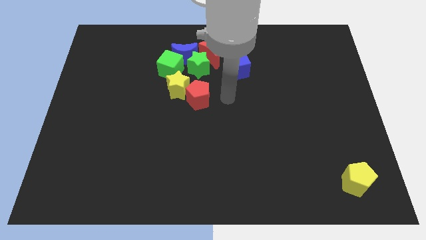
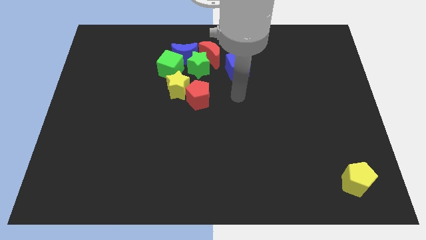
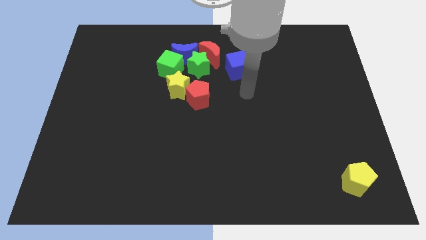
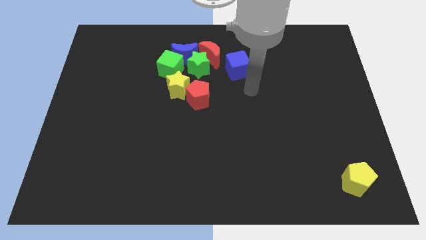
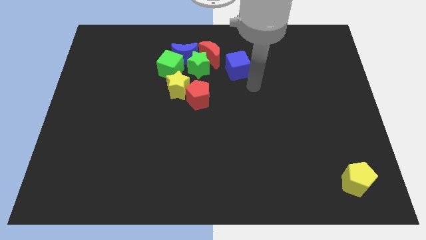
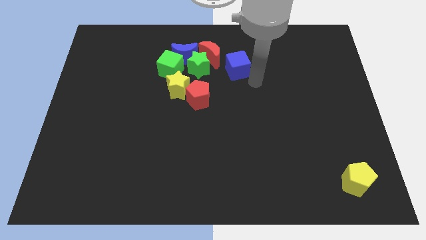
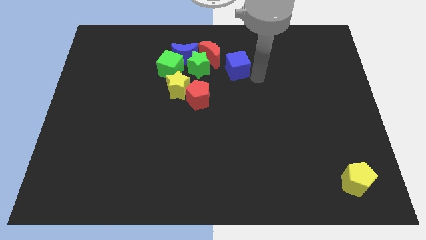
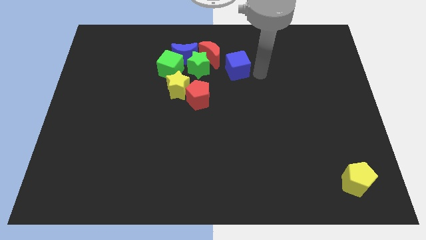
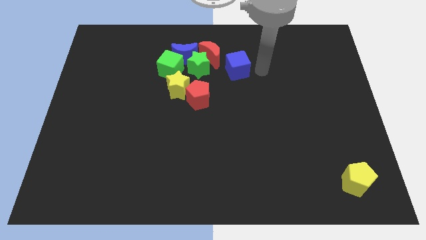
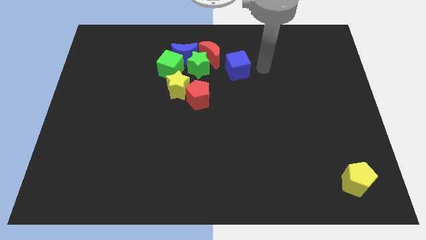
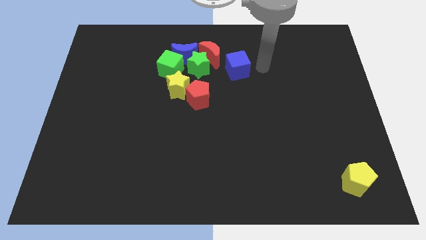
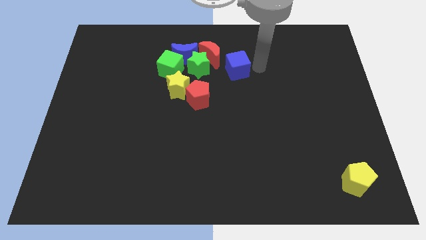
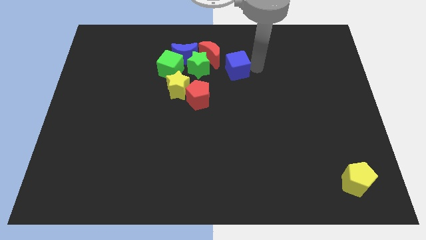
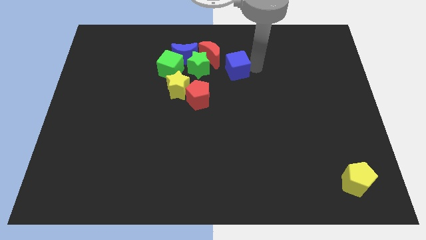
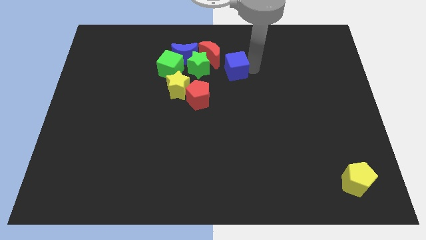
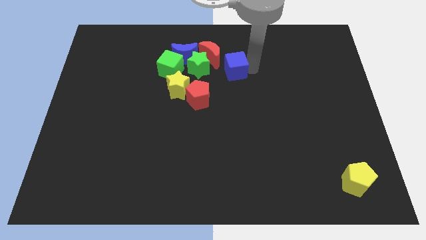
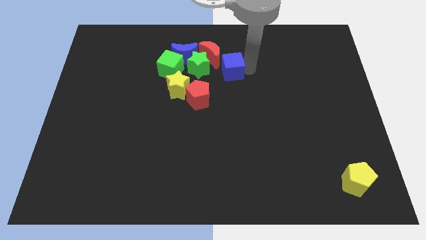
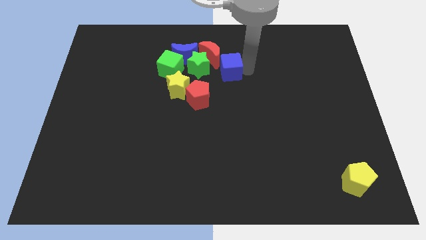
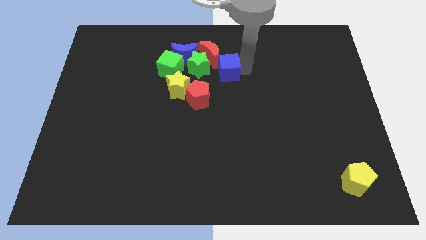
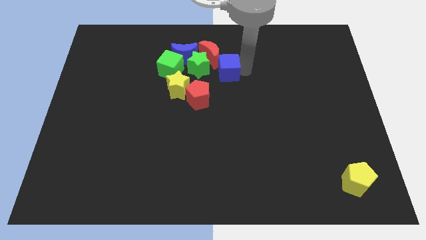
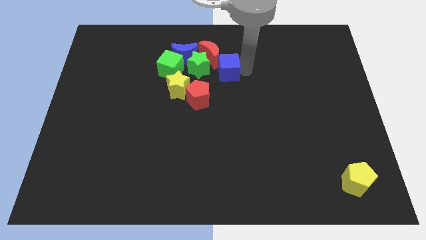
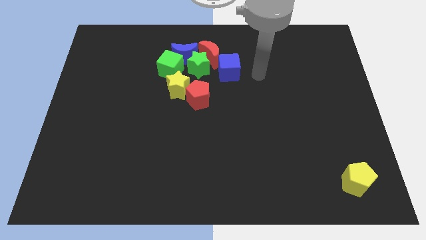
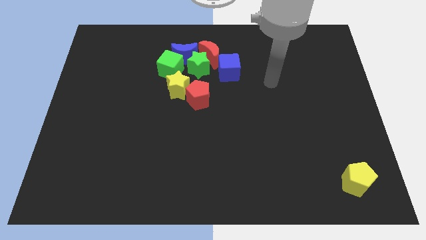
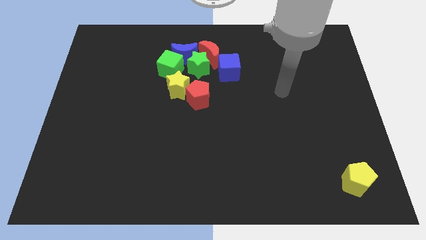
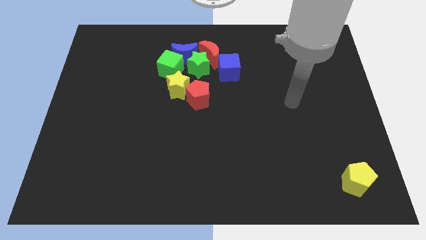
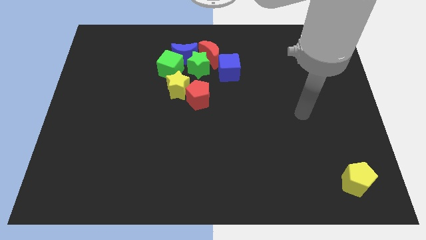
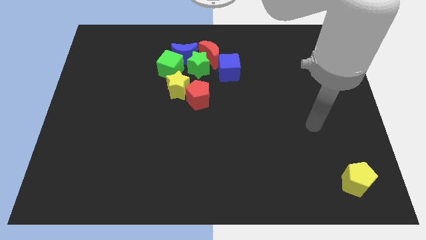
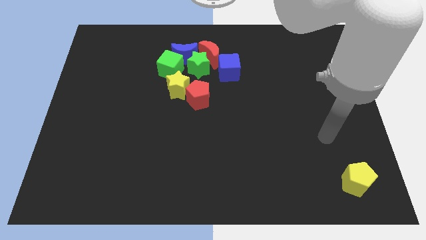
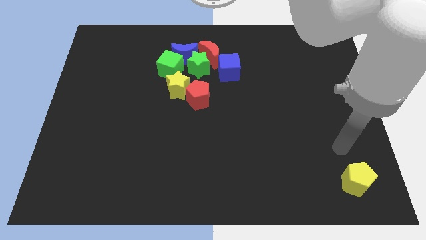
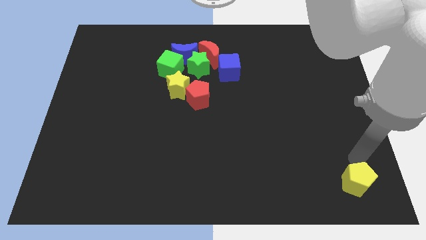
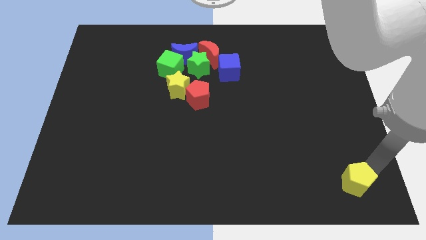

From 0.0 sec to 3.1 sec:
push the blue cube towards the left side of the board

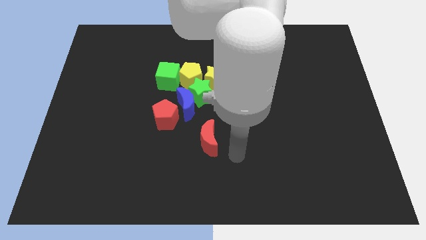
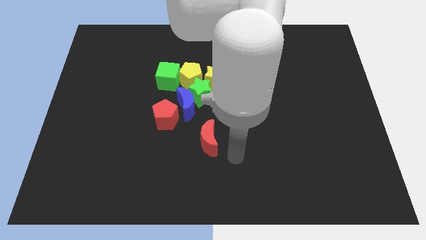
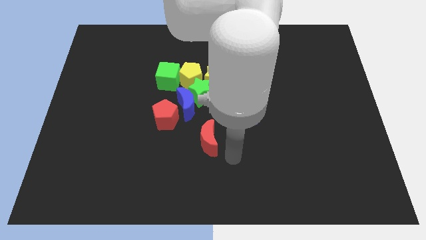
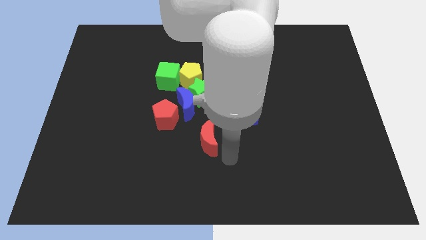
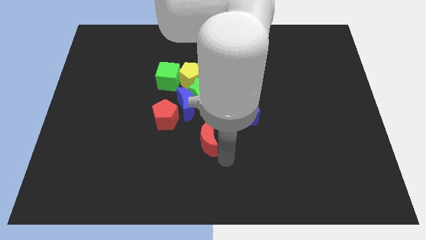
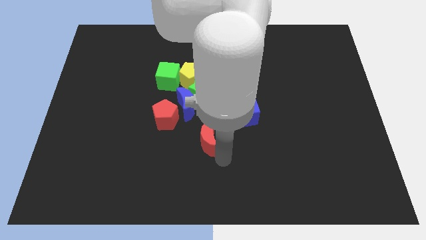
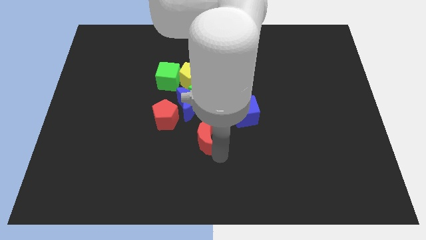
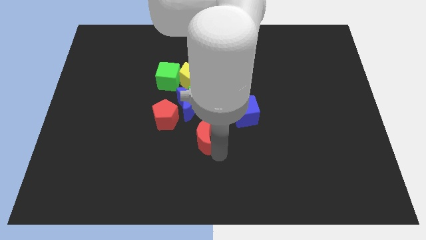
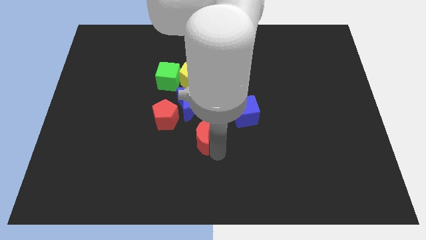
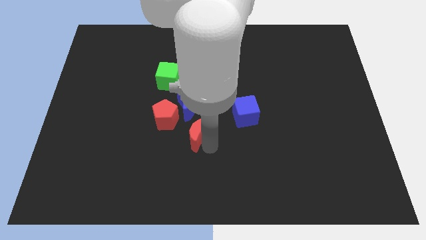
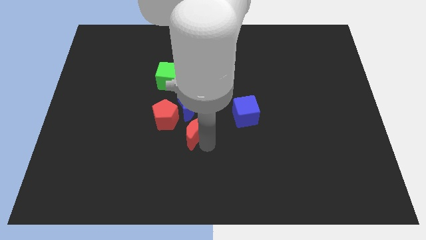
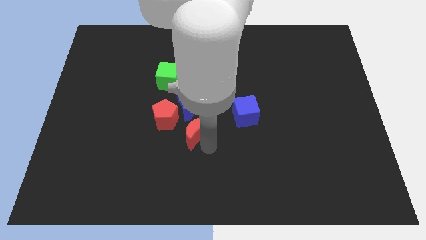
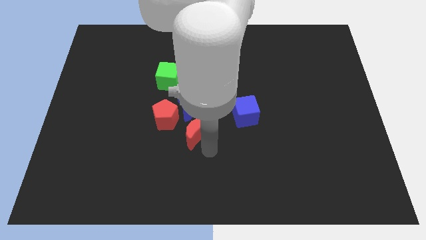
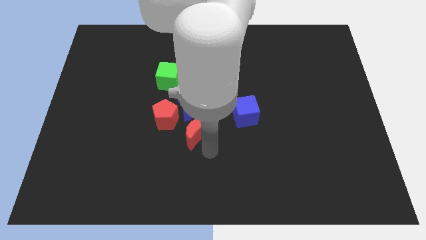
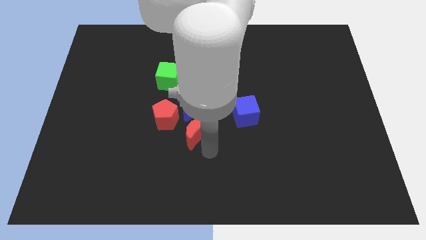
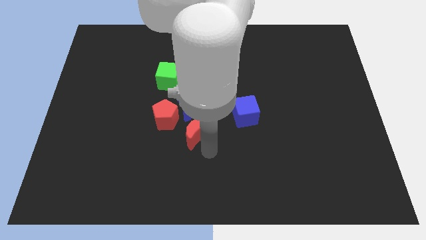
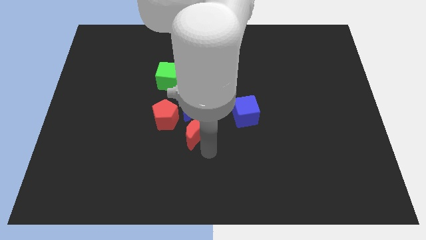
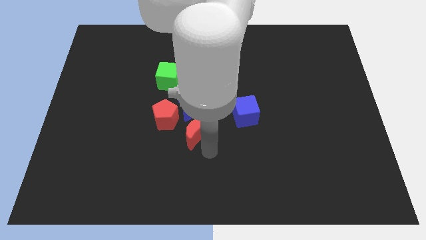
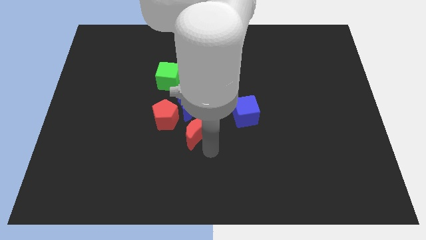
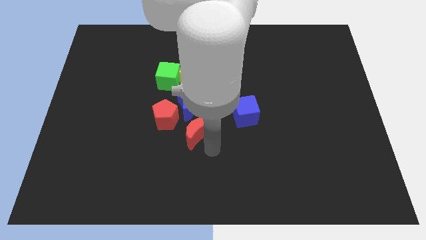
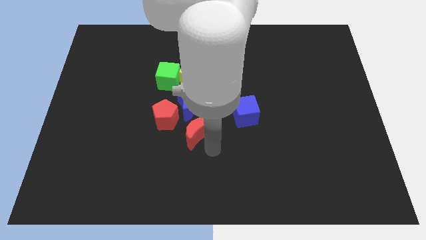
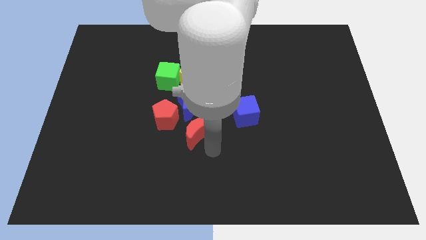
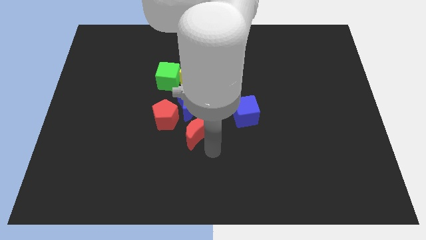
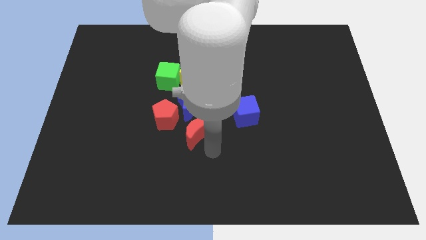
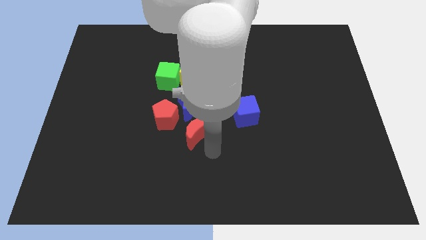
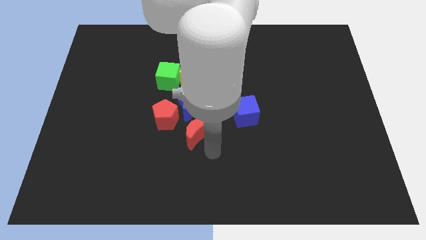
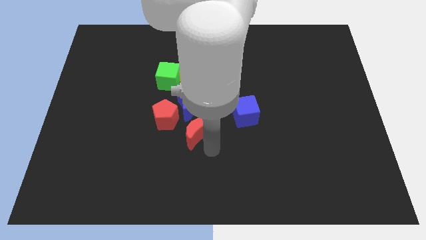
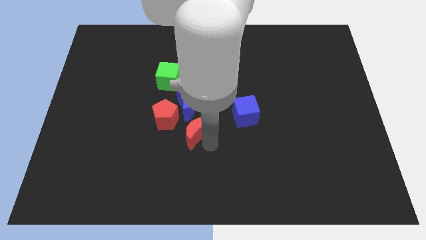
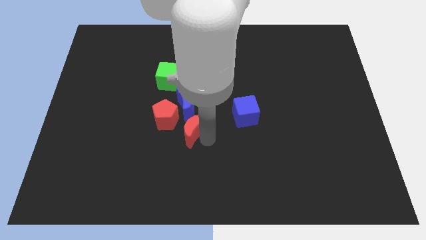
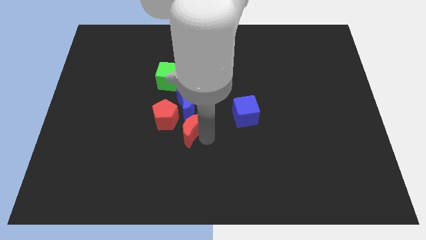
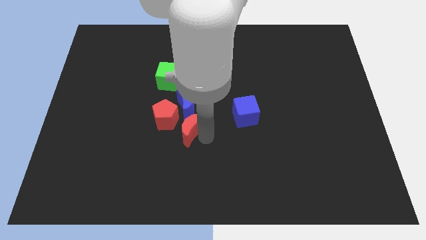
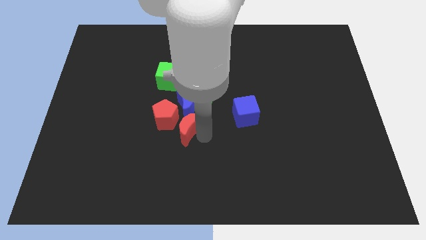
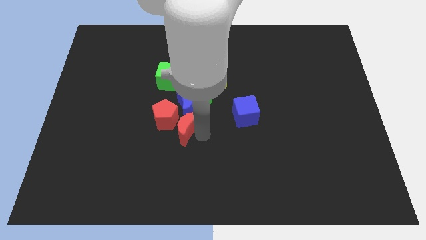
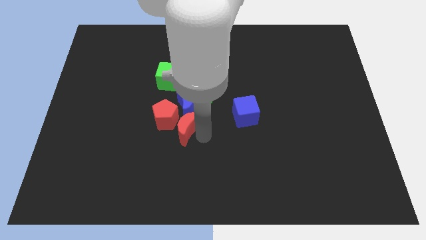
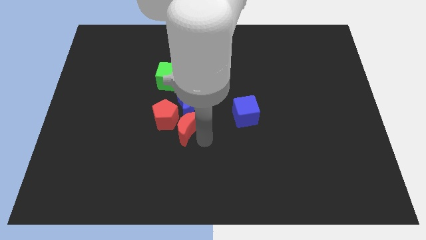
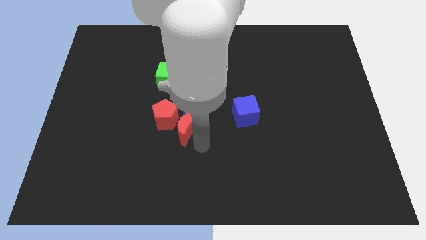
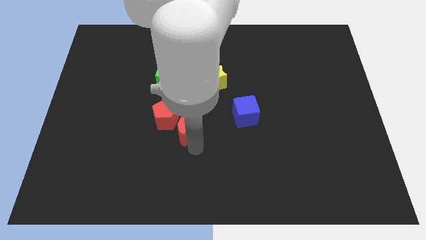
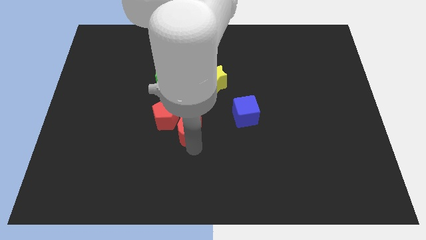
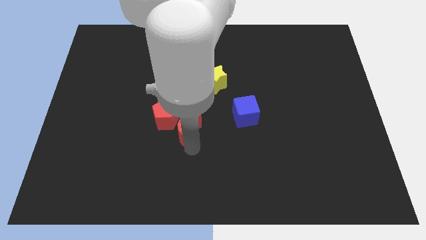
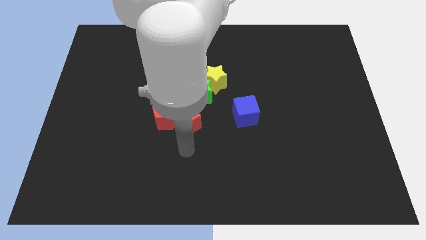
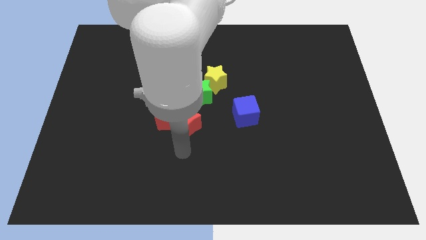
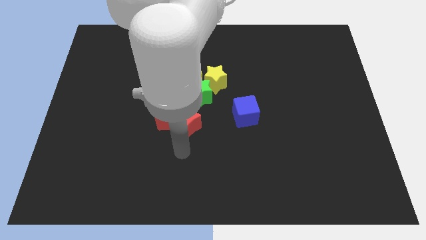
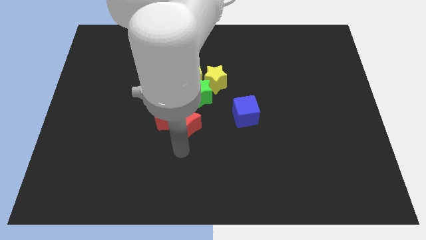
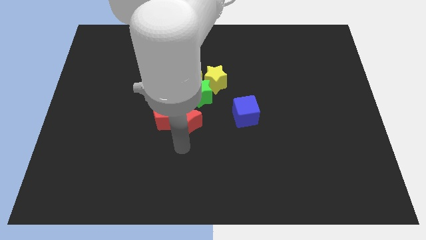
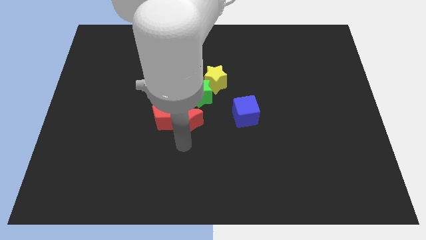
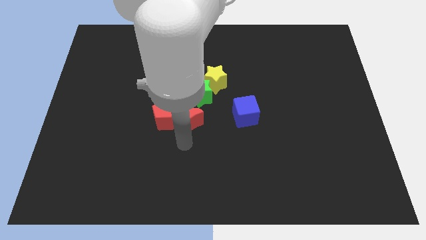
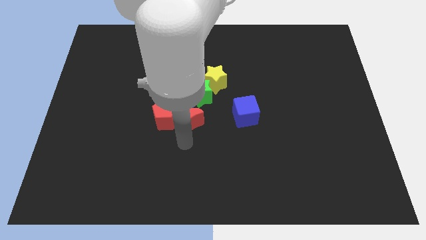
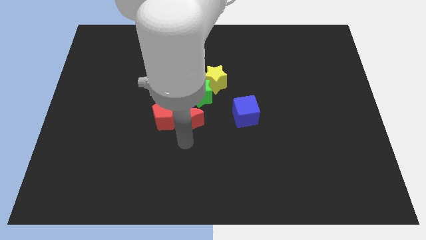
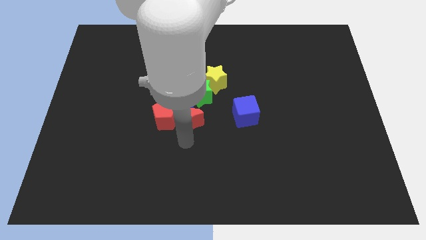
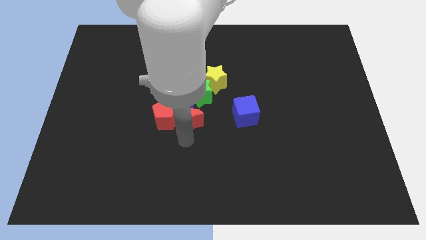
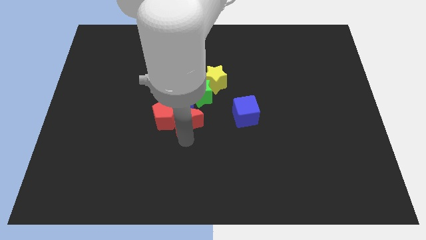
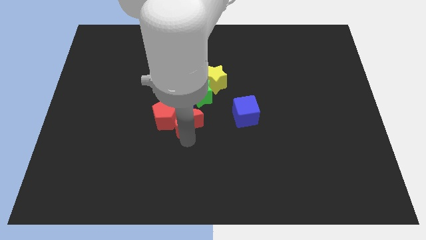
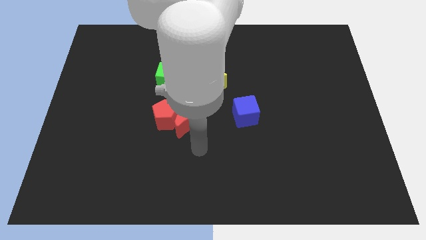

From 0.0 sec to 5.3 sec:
push the red crescent into the blue crescent

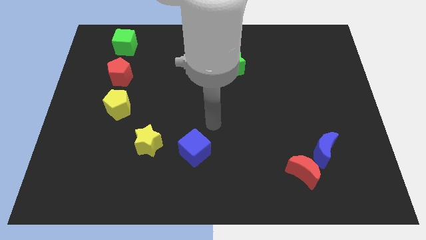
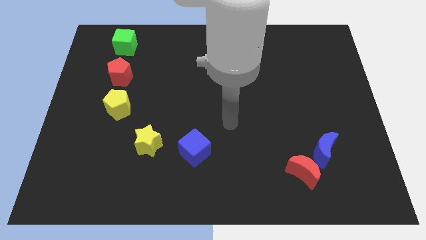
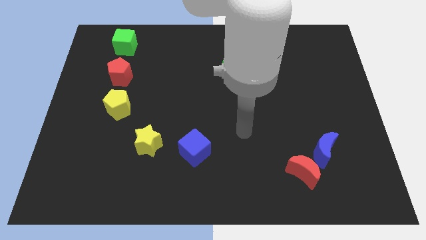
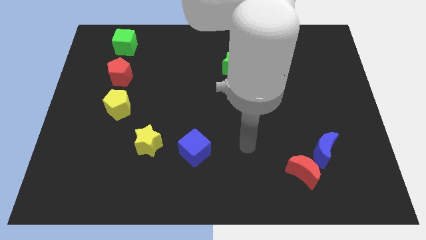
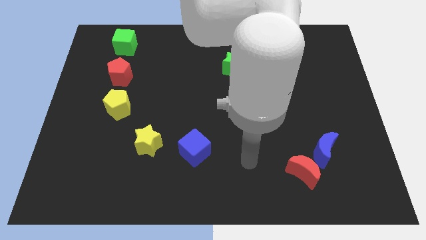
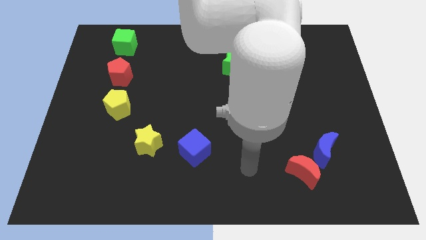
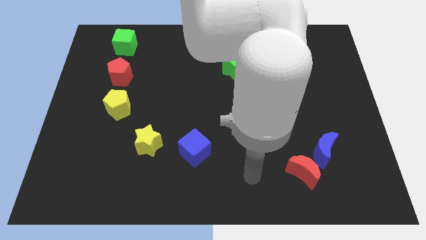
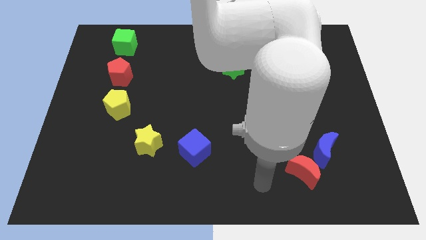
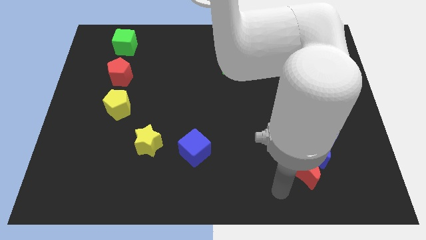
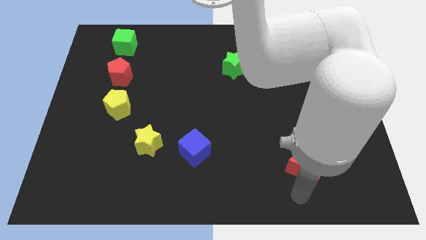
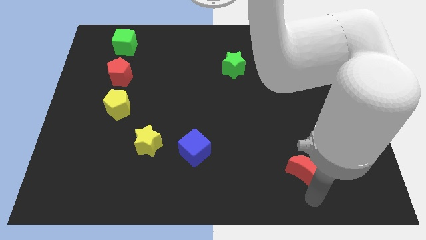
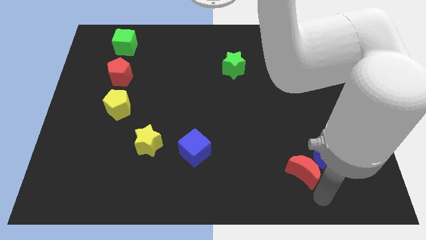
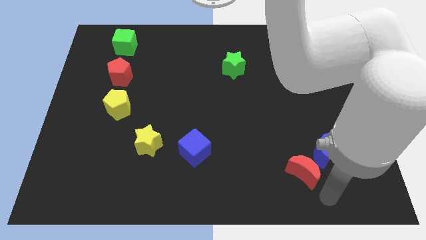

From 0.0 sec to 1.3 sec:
place your hand at the bottom side of the red and blue crescents
